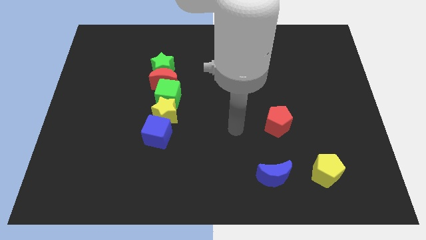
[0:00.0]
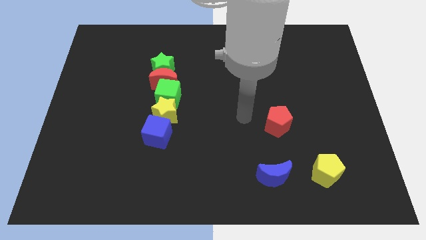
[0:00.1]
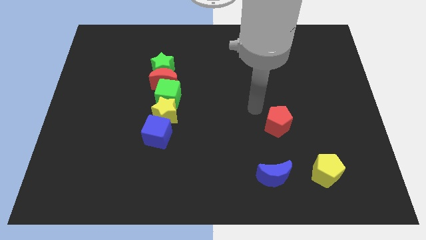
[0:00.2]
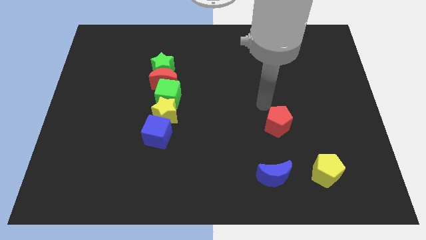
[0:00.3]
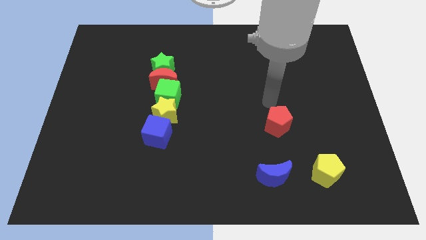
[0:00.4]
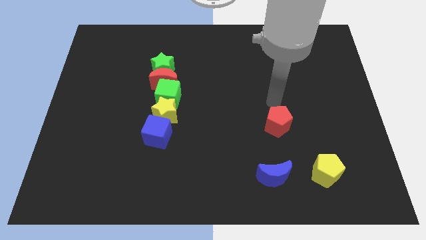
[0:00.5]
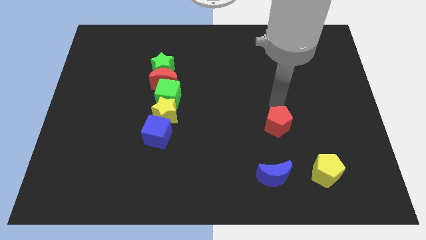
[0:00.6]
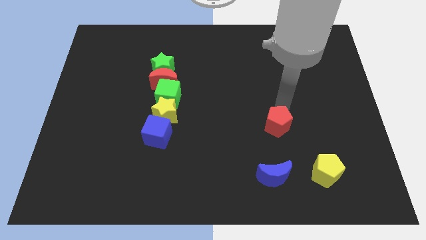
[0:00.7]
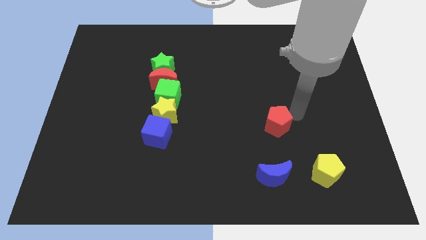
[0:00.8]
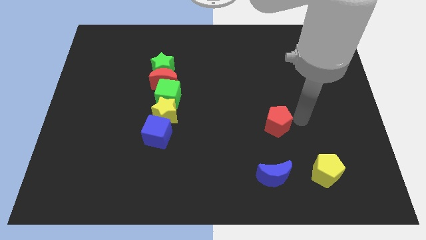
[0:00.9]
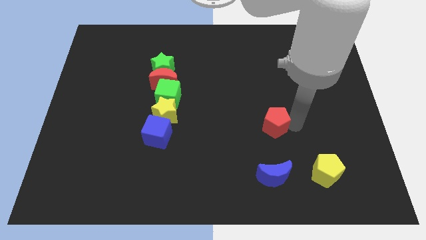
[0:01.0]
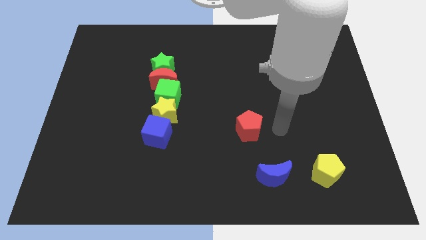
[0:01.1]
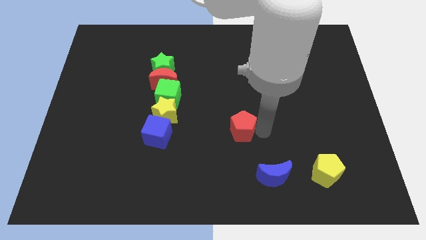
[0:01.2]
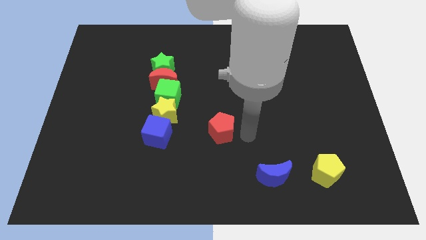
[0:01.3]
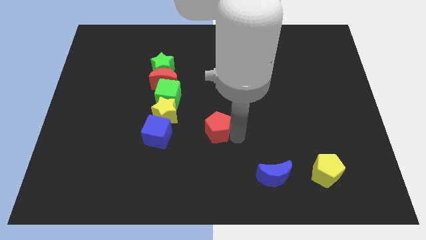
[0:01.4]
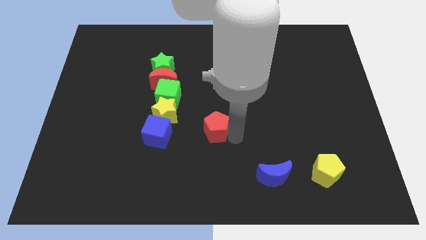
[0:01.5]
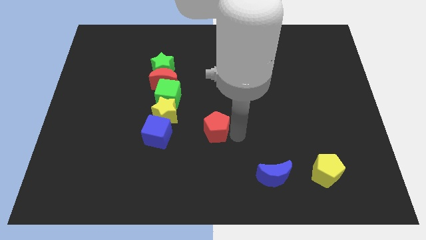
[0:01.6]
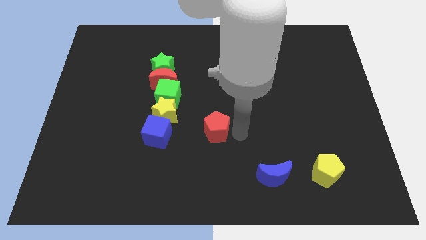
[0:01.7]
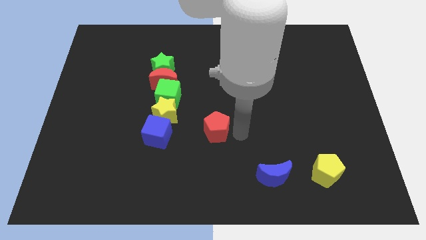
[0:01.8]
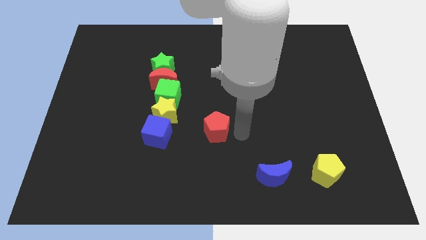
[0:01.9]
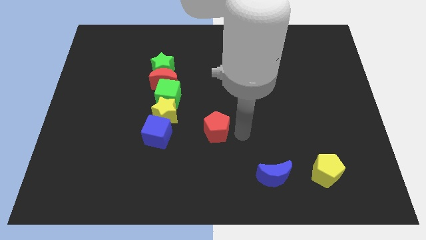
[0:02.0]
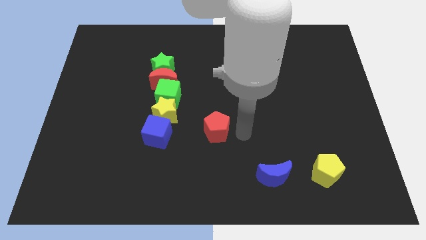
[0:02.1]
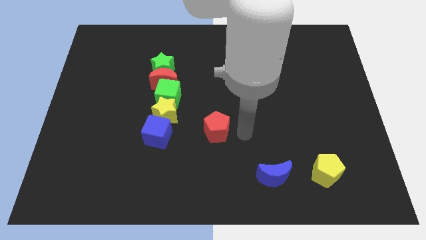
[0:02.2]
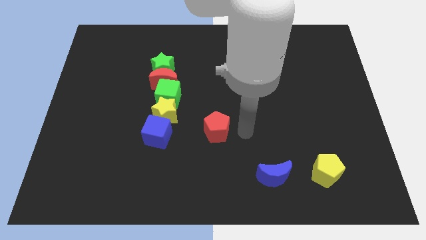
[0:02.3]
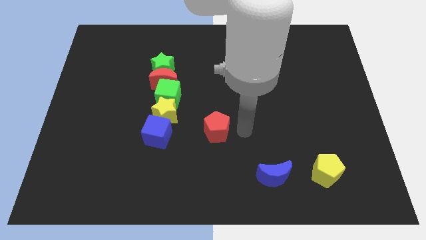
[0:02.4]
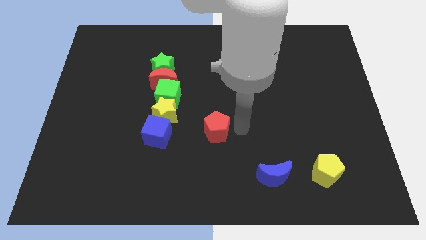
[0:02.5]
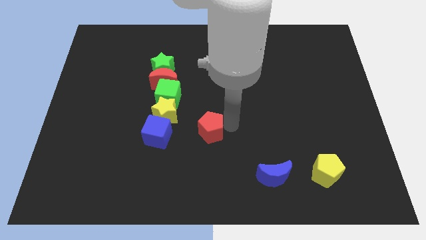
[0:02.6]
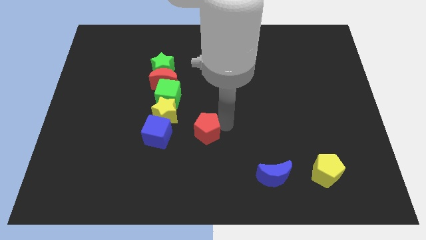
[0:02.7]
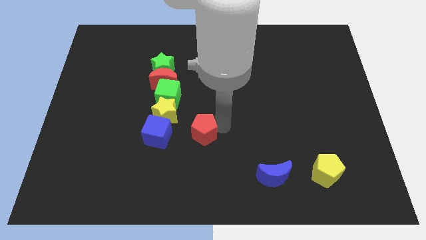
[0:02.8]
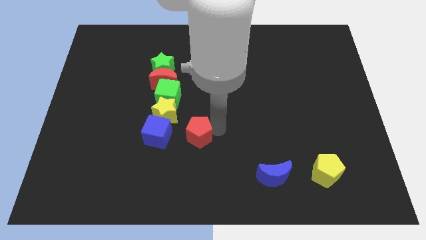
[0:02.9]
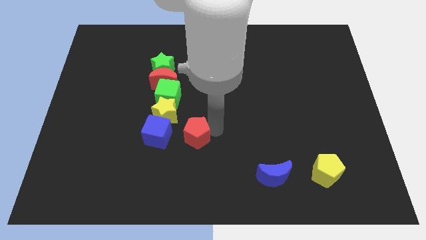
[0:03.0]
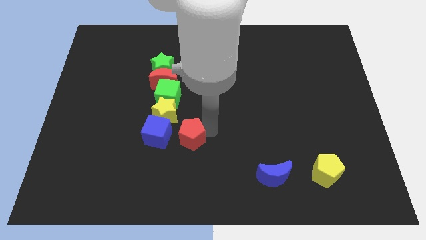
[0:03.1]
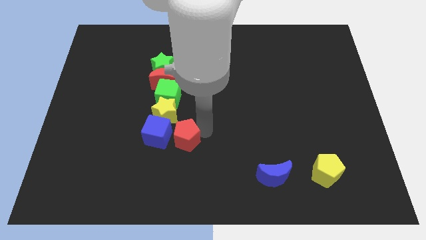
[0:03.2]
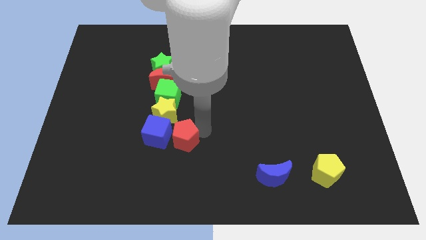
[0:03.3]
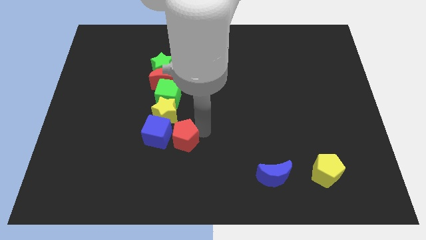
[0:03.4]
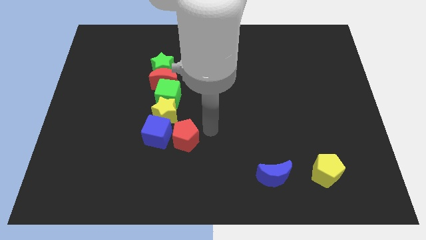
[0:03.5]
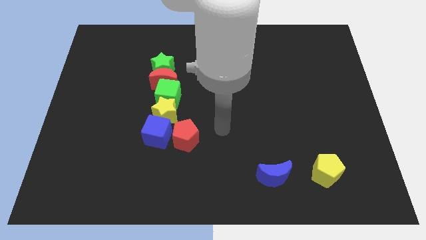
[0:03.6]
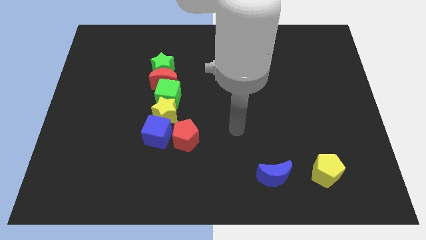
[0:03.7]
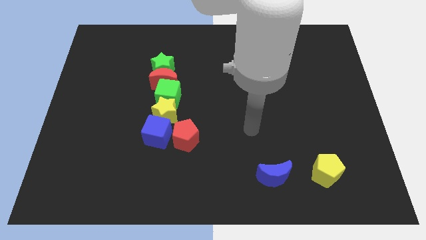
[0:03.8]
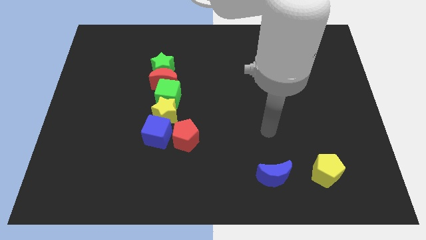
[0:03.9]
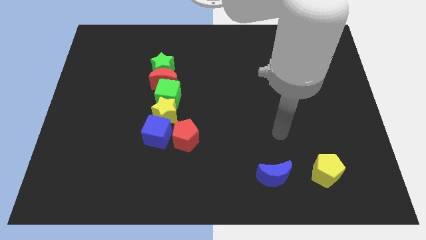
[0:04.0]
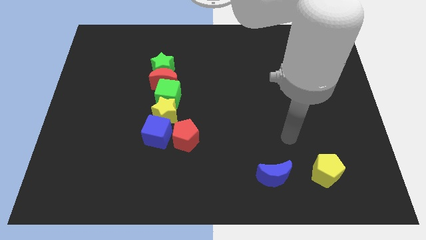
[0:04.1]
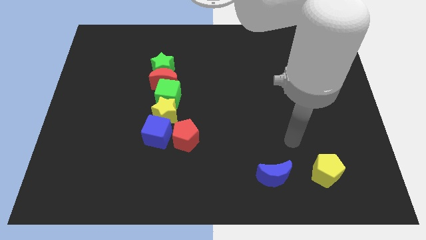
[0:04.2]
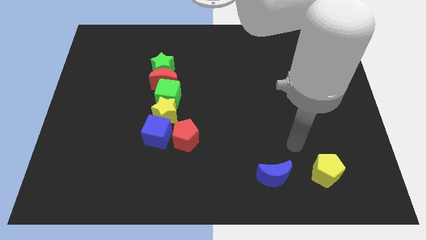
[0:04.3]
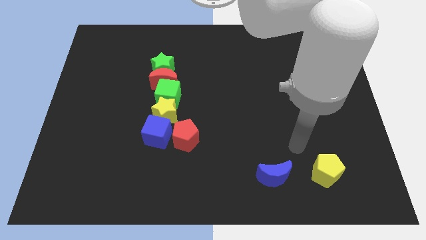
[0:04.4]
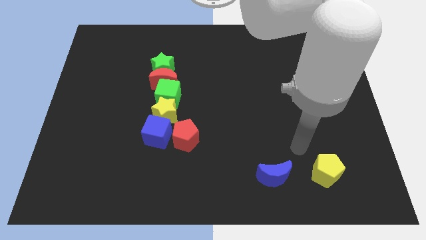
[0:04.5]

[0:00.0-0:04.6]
place the red pentagon close to the blue cube

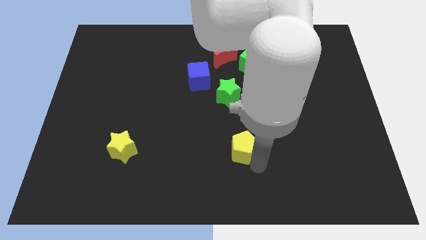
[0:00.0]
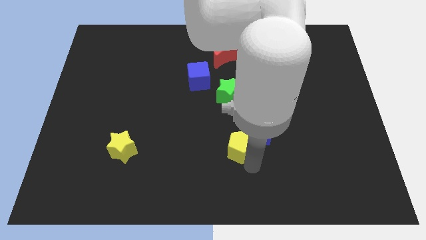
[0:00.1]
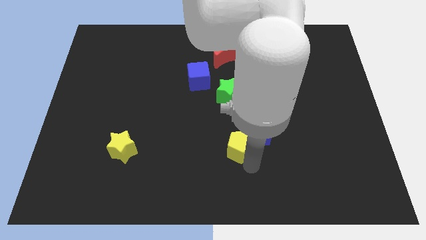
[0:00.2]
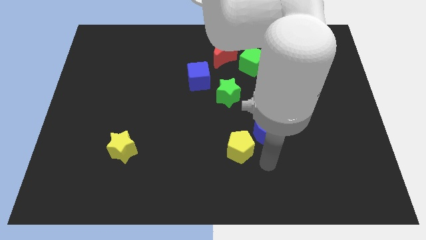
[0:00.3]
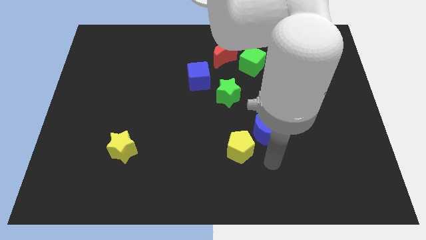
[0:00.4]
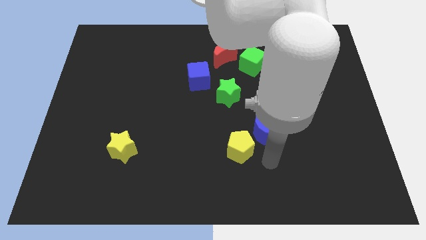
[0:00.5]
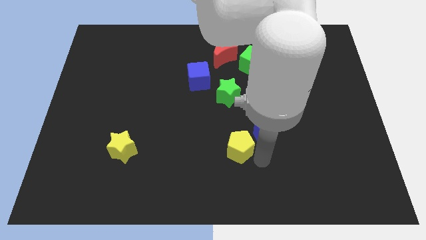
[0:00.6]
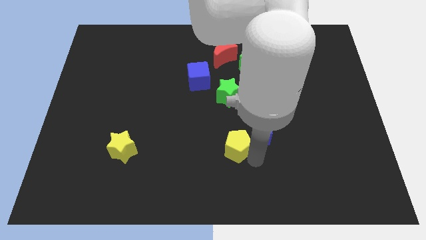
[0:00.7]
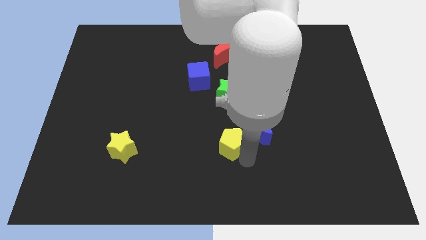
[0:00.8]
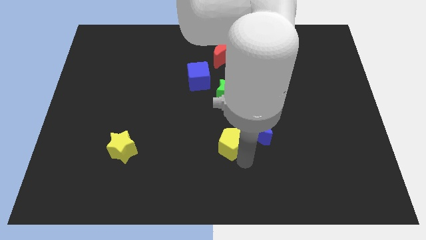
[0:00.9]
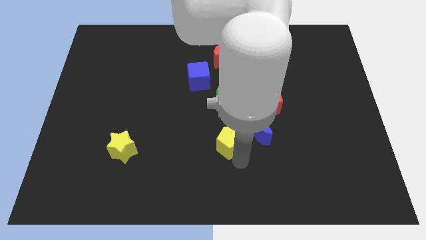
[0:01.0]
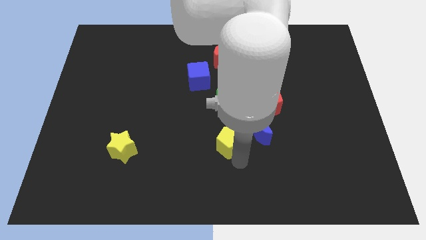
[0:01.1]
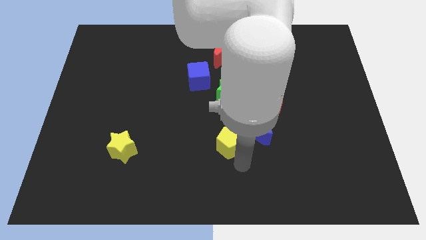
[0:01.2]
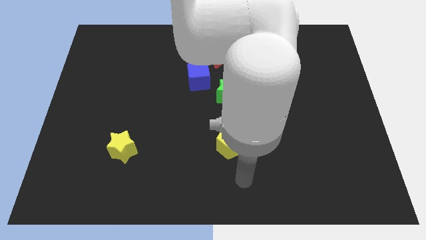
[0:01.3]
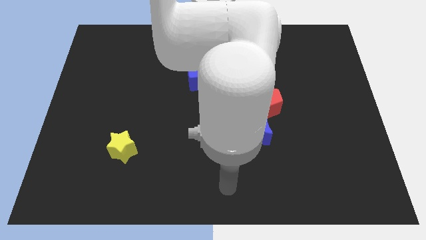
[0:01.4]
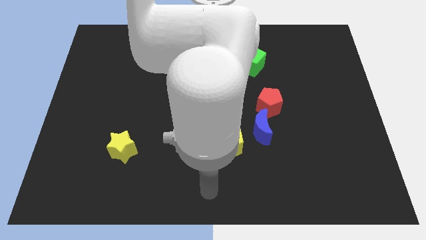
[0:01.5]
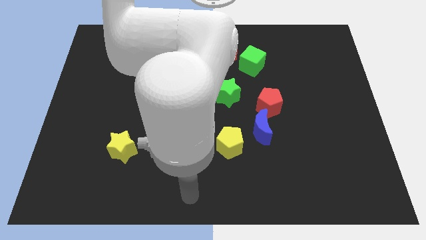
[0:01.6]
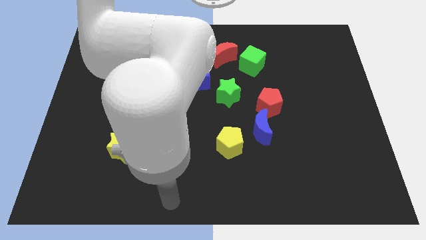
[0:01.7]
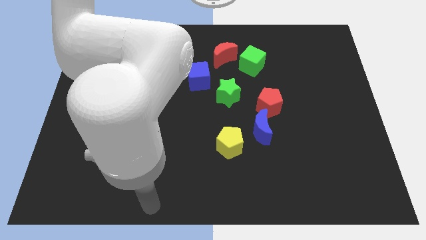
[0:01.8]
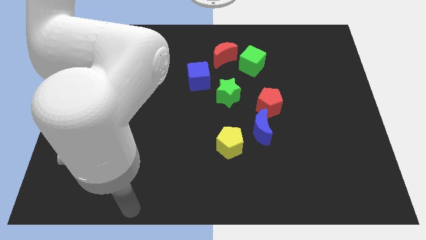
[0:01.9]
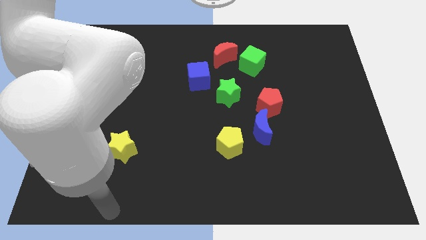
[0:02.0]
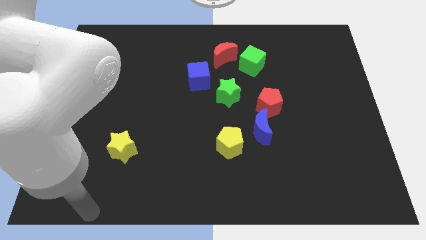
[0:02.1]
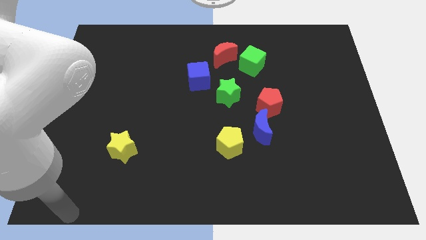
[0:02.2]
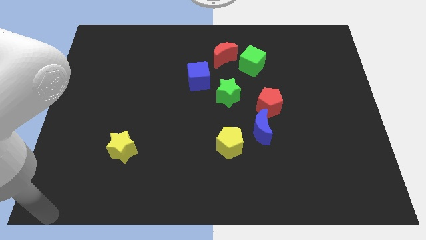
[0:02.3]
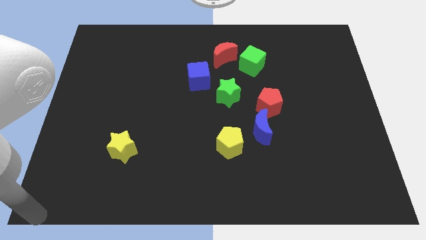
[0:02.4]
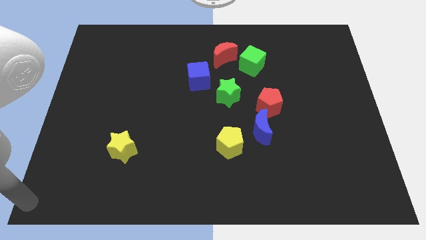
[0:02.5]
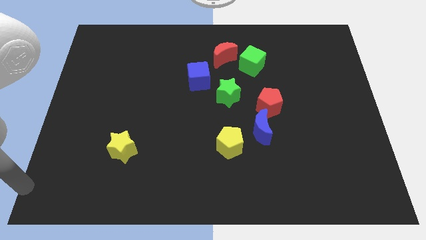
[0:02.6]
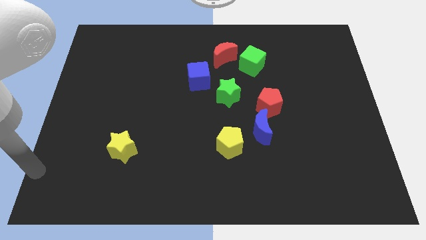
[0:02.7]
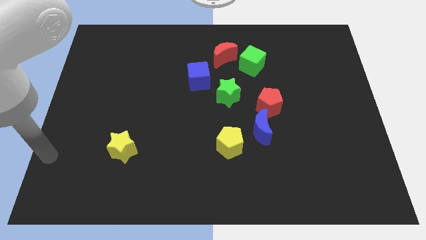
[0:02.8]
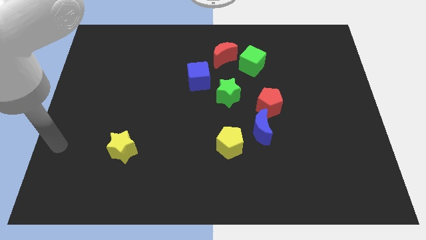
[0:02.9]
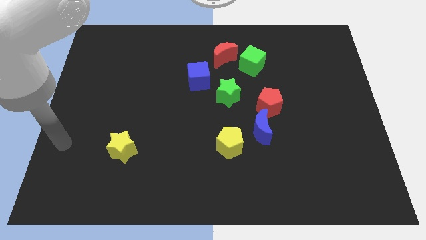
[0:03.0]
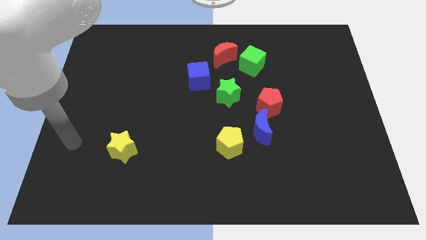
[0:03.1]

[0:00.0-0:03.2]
slide the yellow pentagon parallel to the left of the yellow star

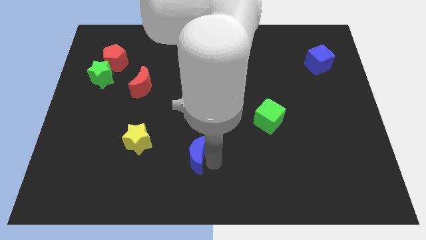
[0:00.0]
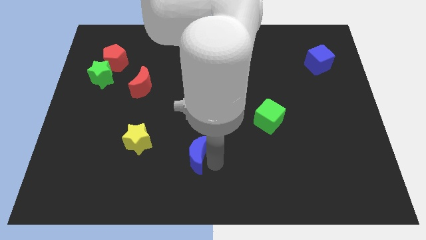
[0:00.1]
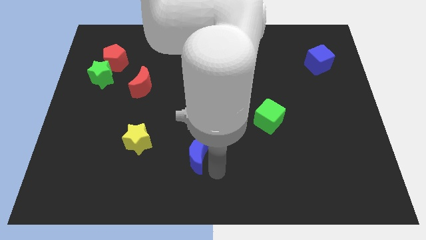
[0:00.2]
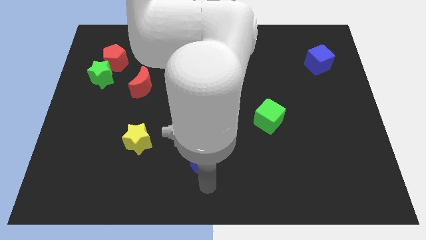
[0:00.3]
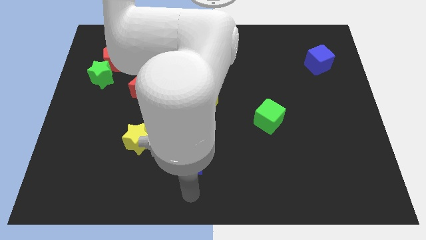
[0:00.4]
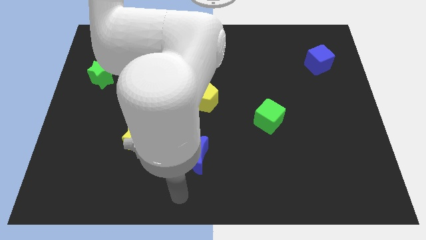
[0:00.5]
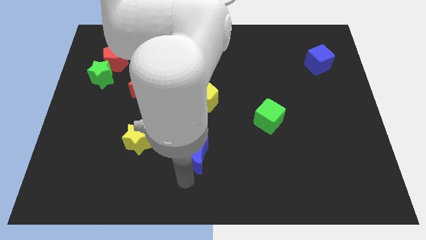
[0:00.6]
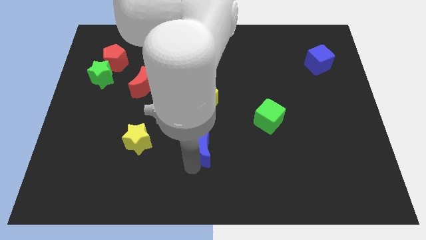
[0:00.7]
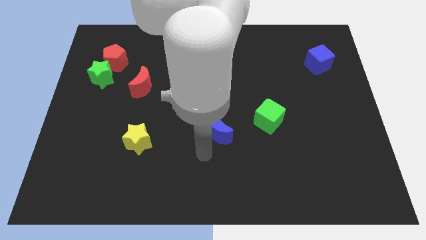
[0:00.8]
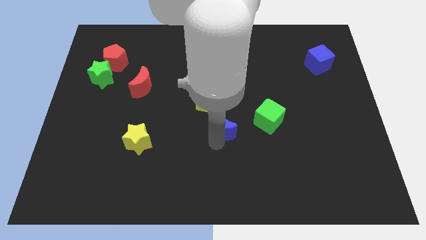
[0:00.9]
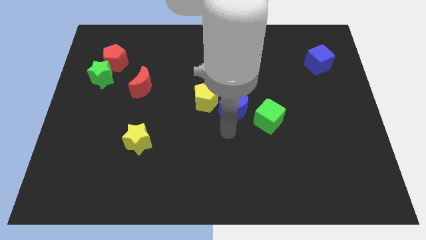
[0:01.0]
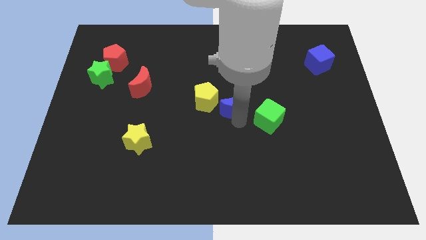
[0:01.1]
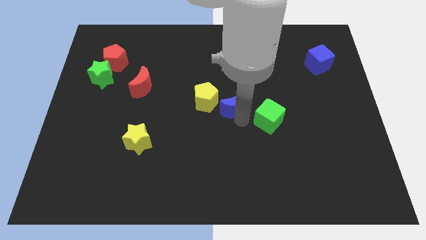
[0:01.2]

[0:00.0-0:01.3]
put the blue moon in between the green cube and yellow pentagon
